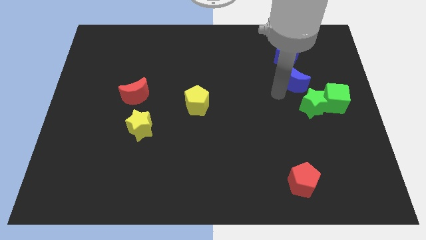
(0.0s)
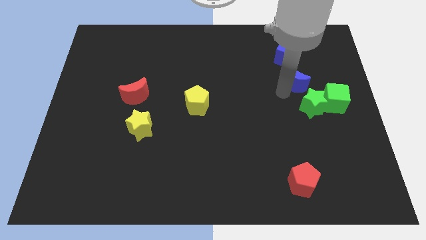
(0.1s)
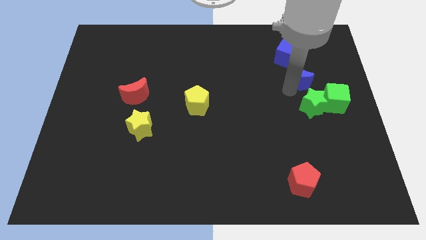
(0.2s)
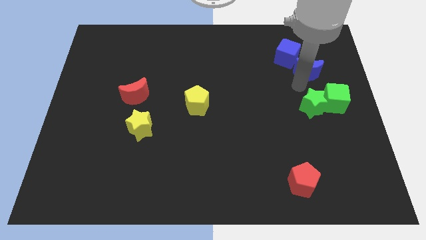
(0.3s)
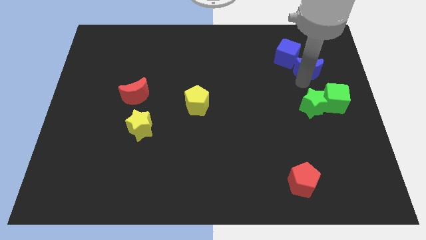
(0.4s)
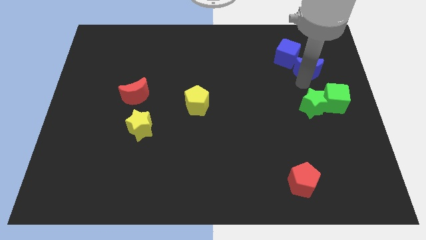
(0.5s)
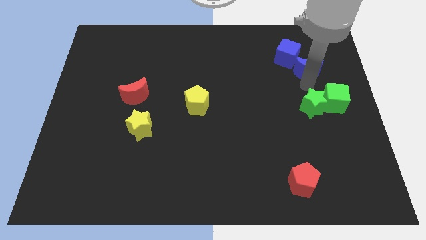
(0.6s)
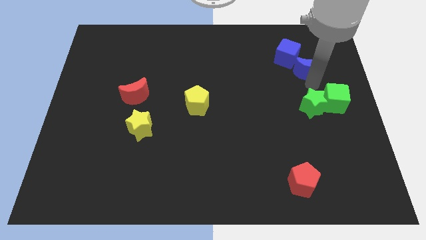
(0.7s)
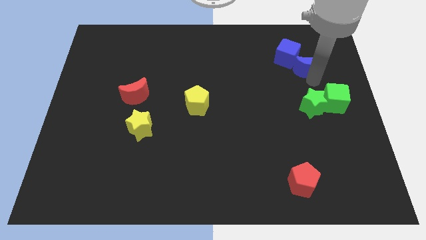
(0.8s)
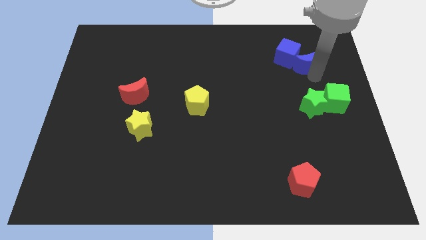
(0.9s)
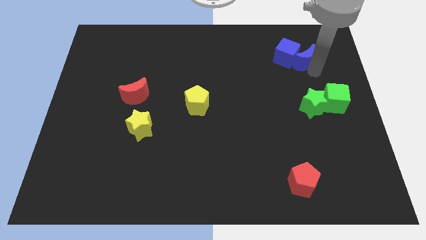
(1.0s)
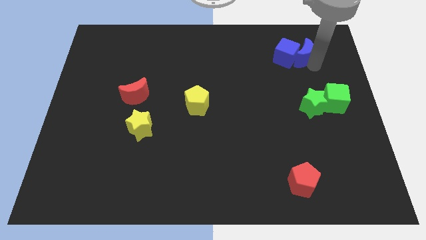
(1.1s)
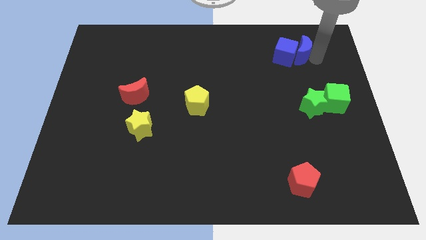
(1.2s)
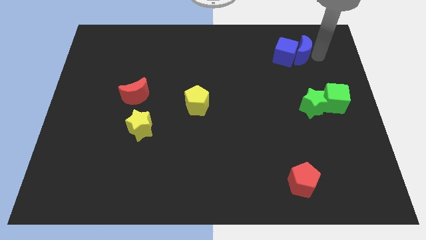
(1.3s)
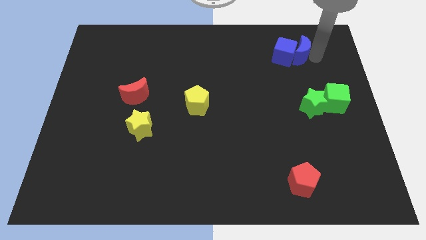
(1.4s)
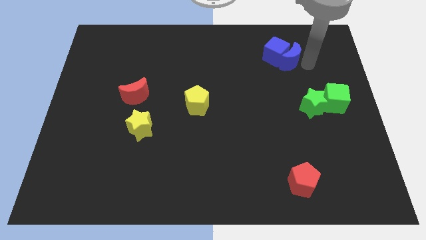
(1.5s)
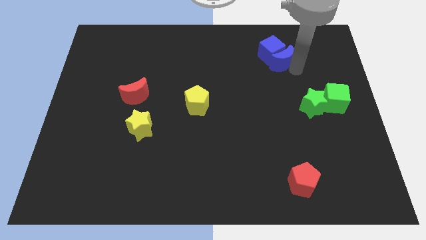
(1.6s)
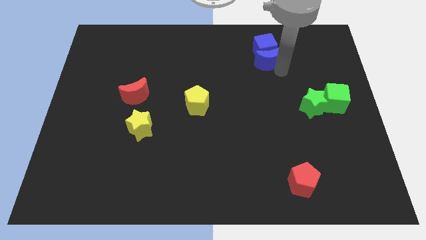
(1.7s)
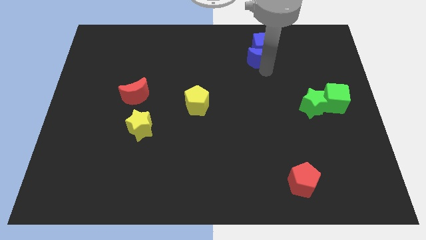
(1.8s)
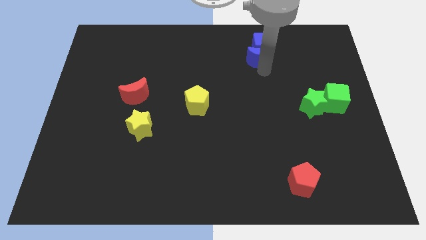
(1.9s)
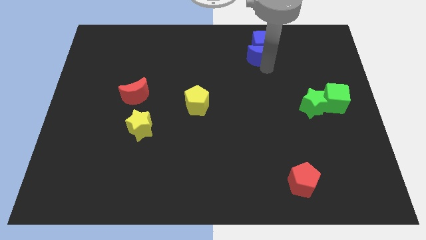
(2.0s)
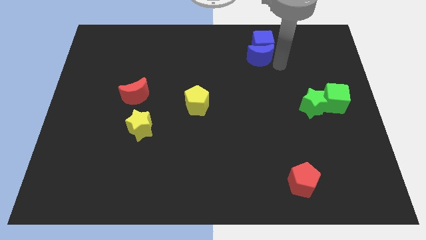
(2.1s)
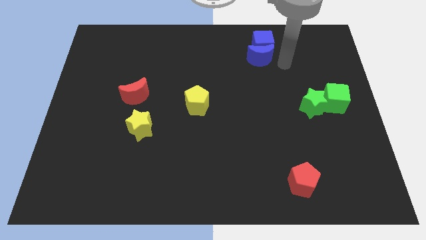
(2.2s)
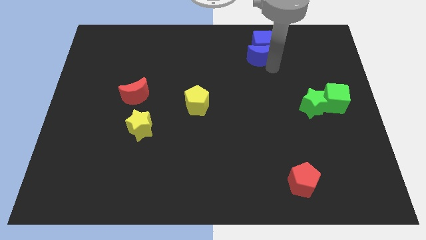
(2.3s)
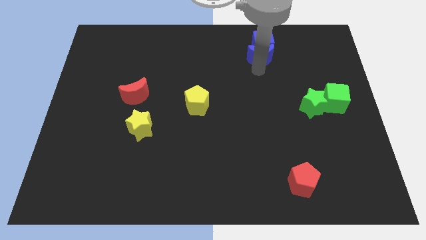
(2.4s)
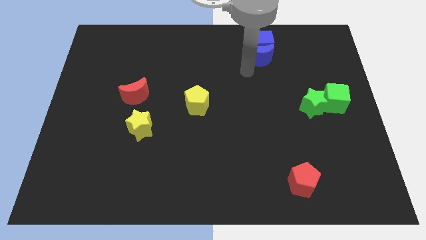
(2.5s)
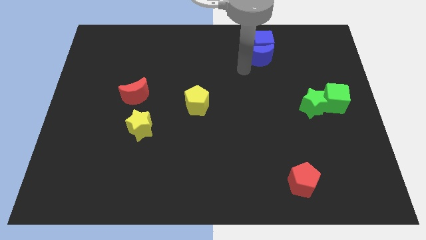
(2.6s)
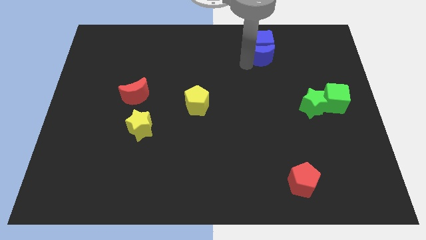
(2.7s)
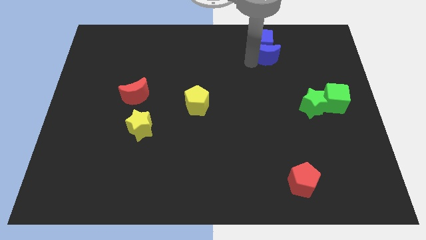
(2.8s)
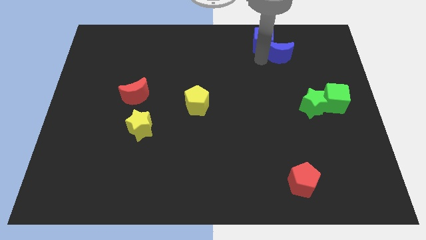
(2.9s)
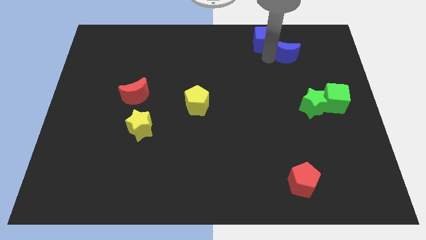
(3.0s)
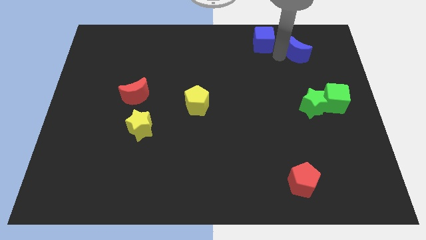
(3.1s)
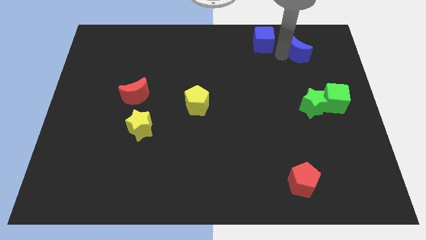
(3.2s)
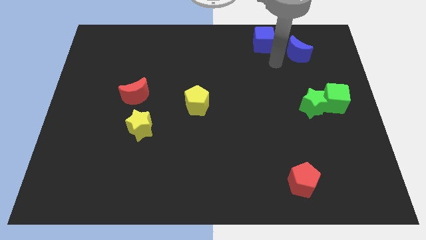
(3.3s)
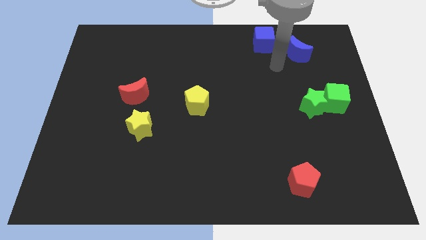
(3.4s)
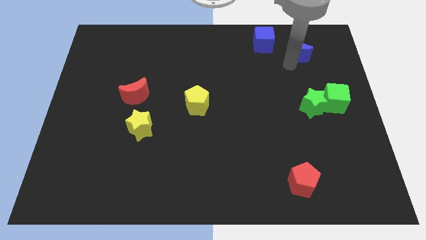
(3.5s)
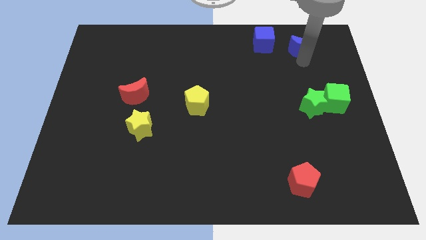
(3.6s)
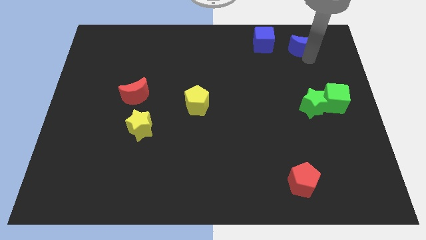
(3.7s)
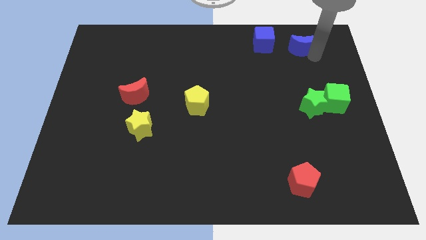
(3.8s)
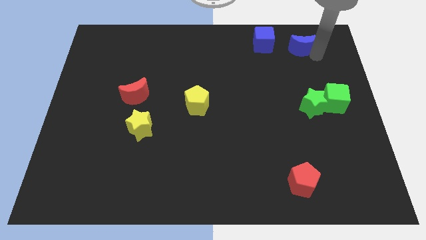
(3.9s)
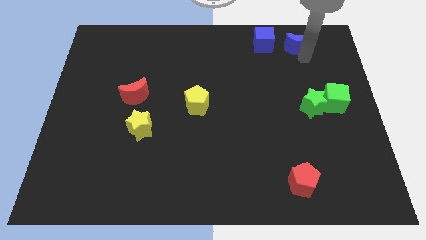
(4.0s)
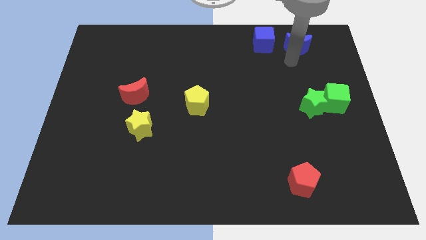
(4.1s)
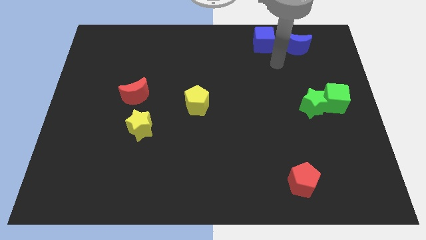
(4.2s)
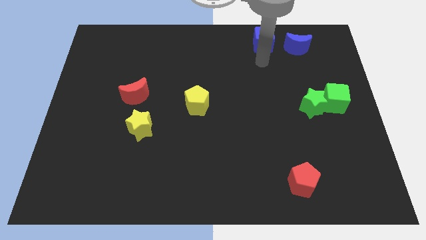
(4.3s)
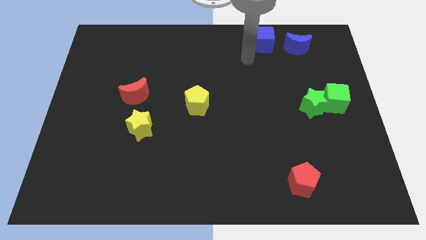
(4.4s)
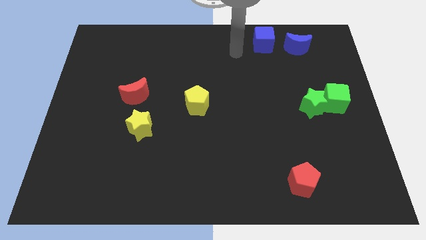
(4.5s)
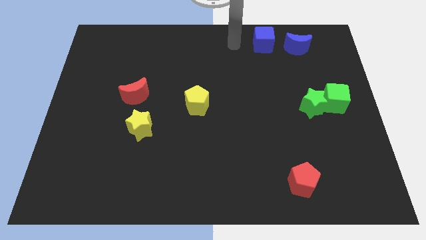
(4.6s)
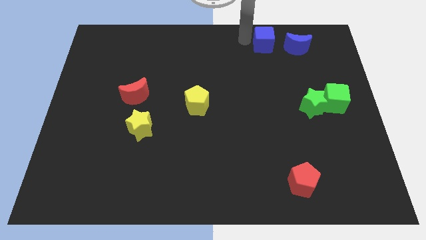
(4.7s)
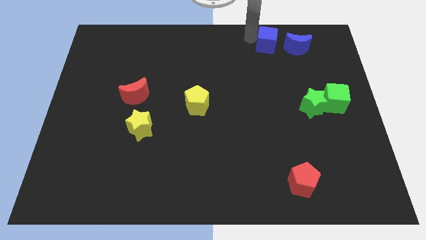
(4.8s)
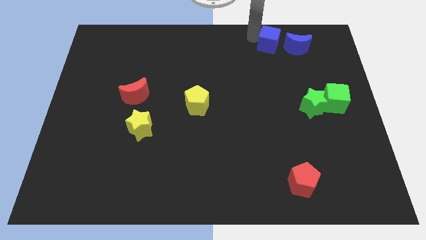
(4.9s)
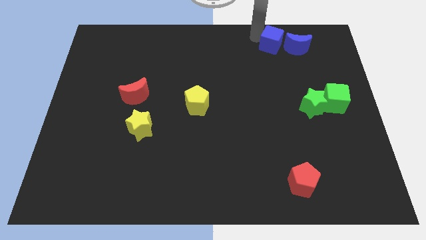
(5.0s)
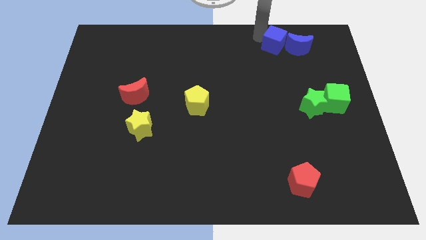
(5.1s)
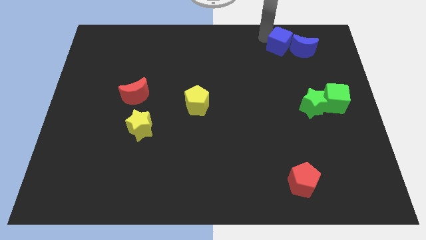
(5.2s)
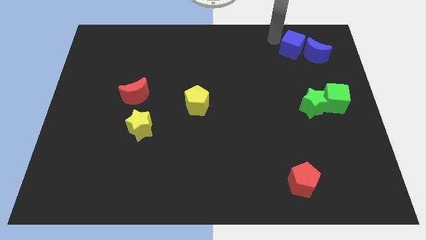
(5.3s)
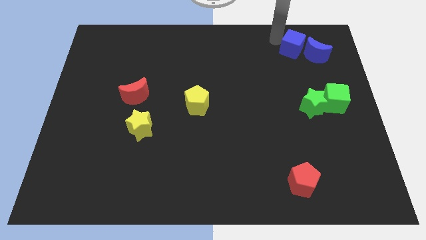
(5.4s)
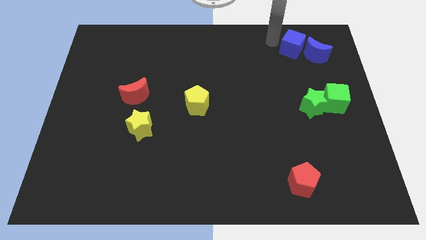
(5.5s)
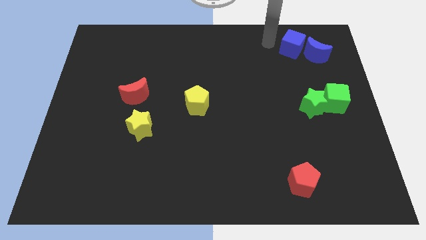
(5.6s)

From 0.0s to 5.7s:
move the blue crescent and blue cube towards the green blocks

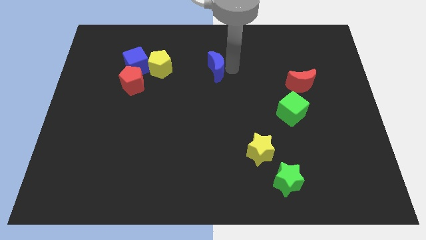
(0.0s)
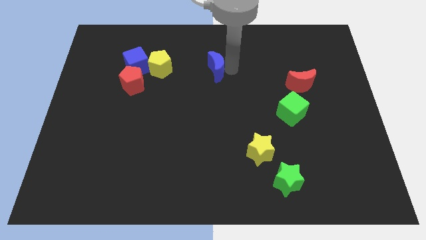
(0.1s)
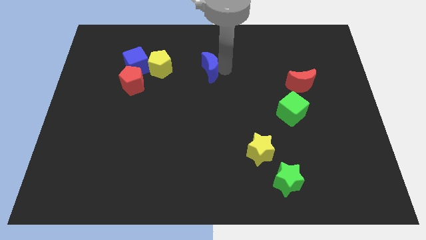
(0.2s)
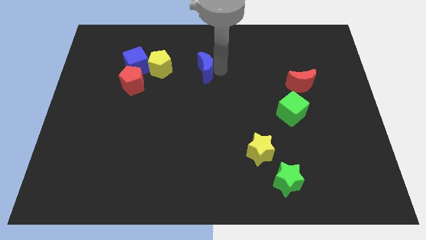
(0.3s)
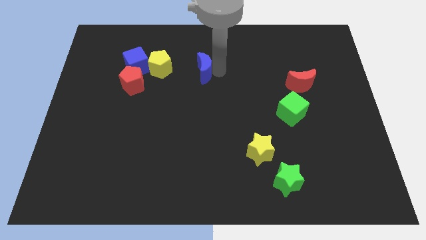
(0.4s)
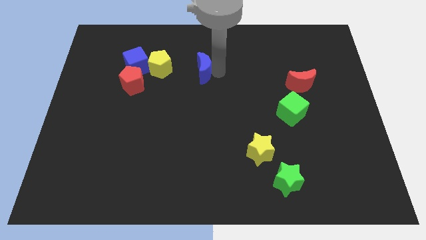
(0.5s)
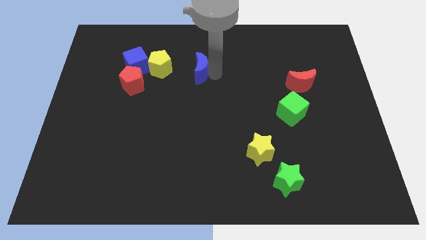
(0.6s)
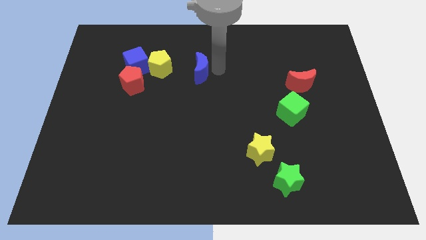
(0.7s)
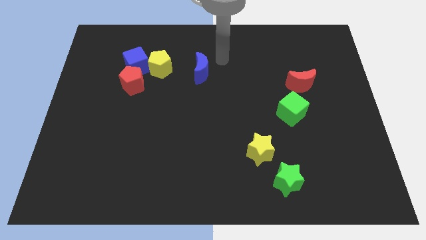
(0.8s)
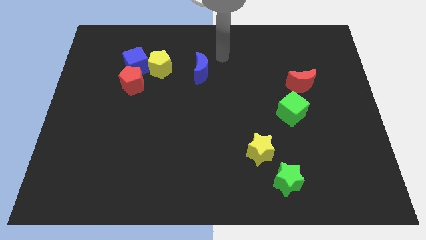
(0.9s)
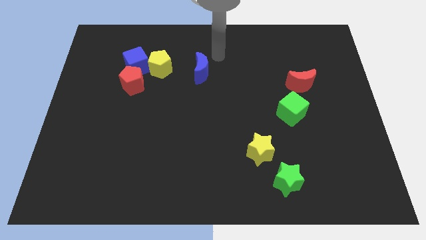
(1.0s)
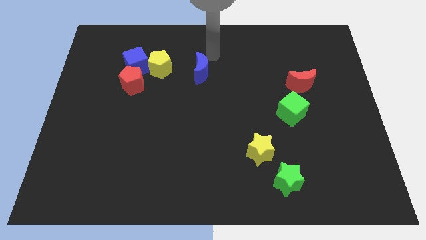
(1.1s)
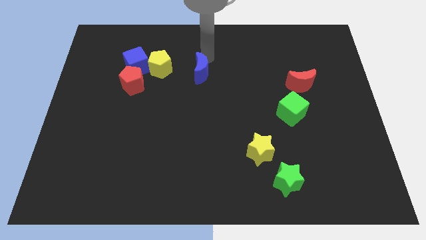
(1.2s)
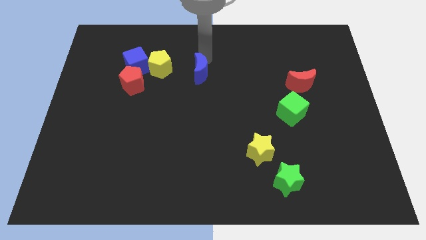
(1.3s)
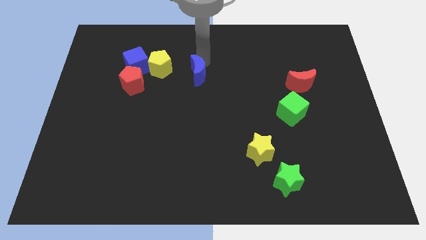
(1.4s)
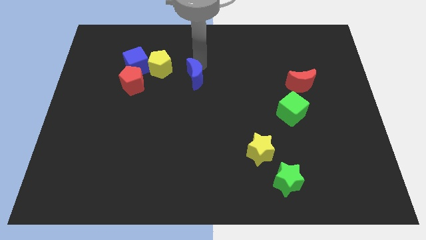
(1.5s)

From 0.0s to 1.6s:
move the blue crescent to the right of the yellow pentagon

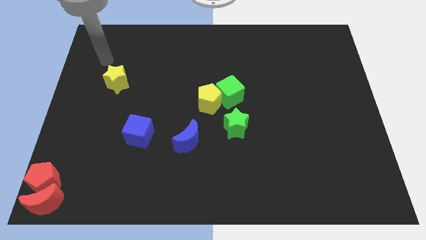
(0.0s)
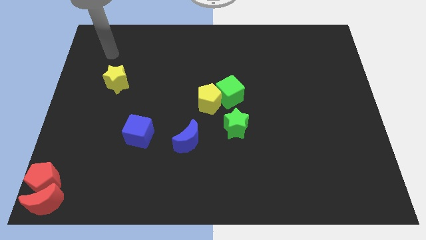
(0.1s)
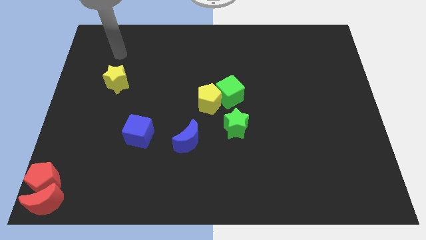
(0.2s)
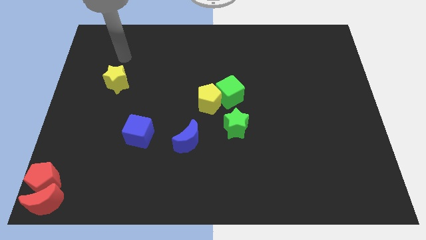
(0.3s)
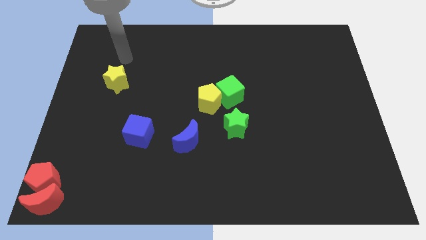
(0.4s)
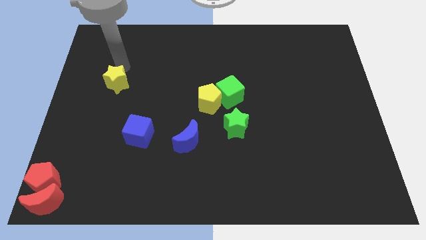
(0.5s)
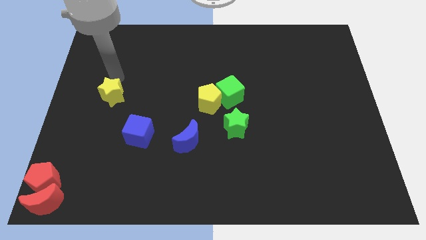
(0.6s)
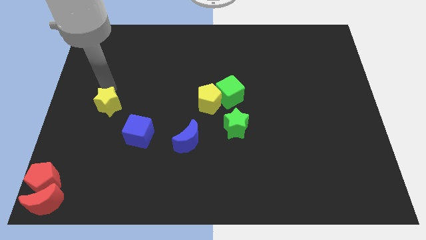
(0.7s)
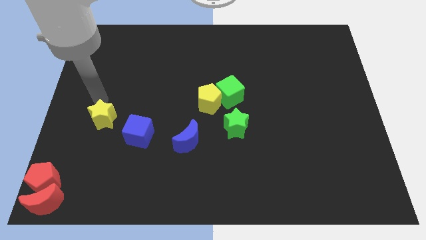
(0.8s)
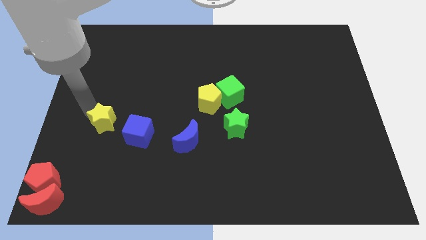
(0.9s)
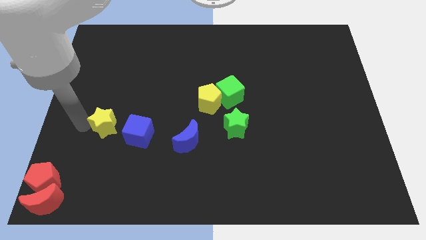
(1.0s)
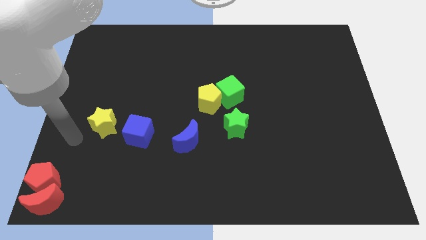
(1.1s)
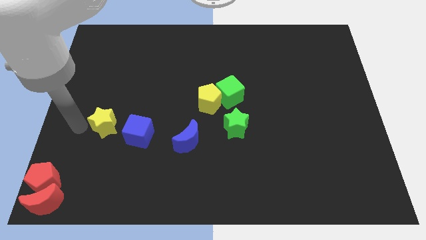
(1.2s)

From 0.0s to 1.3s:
place the yellow star left to the blue cube

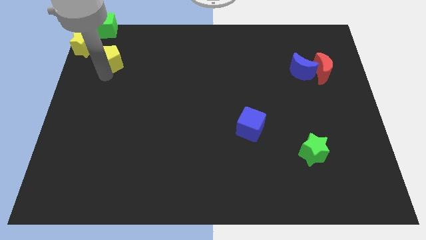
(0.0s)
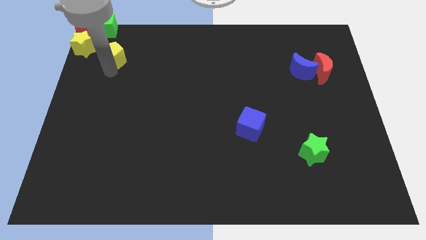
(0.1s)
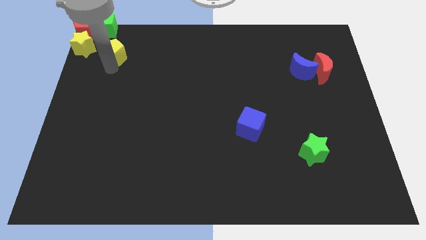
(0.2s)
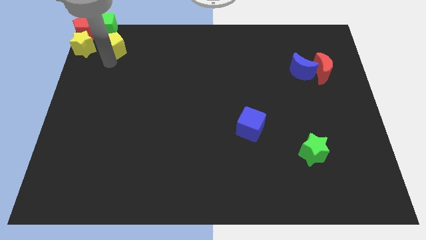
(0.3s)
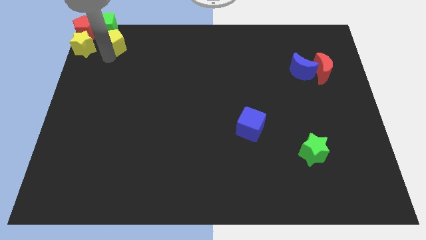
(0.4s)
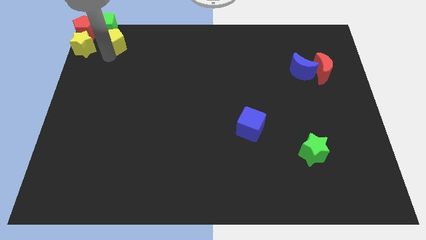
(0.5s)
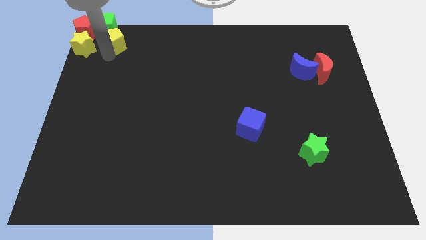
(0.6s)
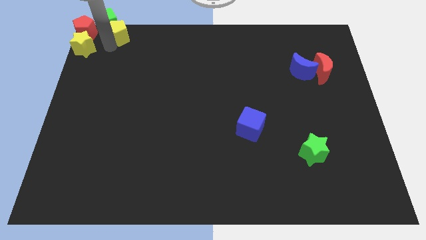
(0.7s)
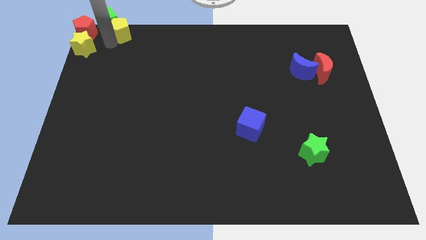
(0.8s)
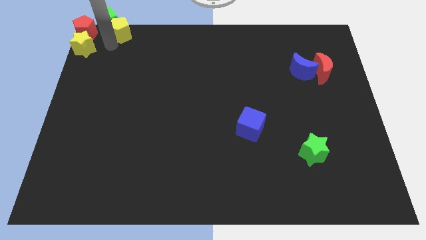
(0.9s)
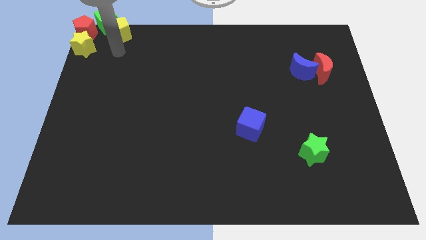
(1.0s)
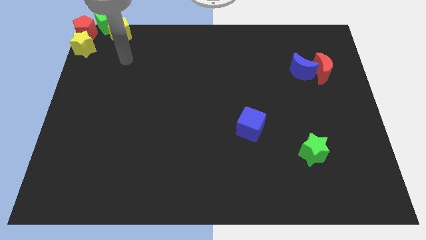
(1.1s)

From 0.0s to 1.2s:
attach the yellow pentagon to the green cube
